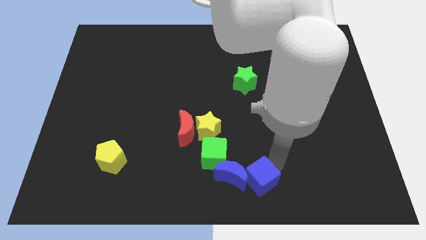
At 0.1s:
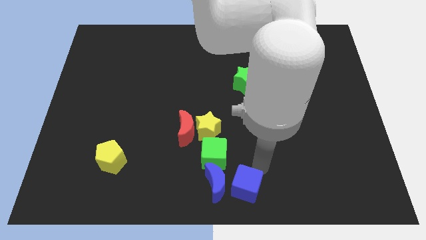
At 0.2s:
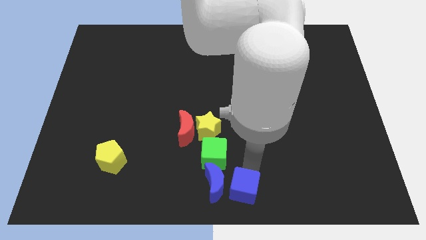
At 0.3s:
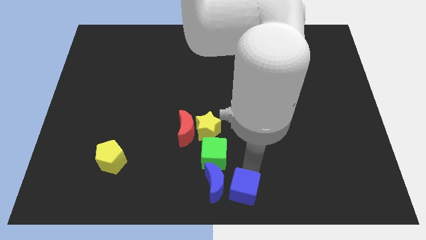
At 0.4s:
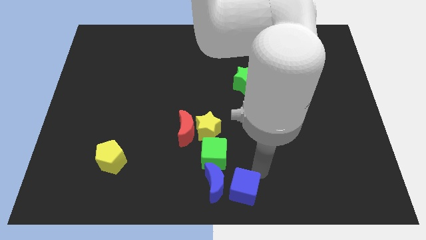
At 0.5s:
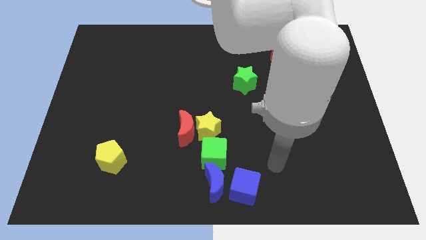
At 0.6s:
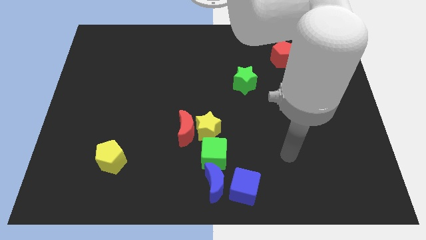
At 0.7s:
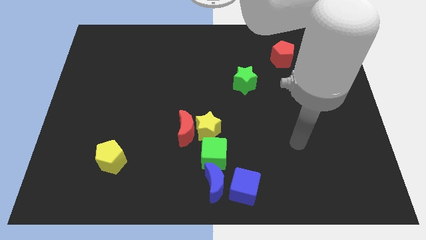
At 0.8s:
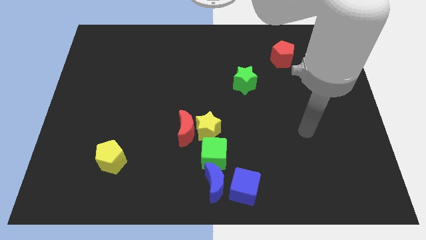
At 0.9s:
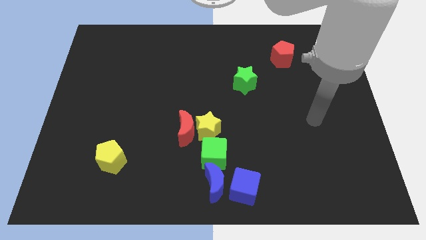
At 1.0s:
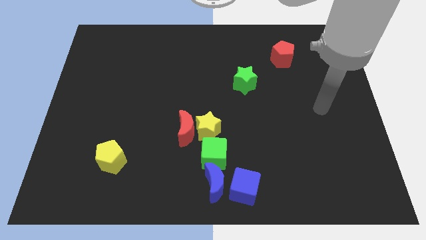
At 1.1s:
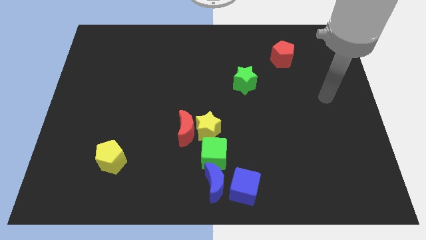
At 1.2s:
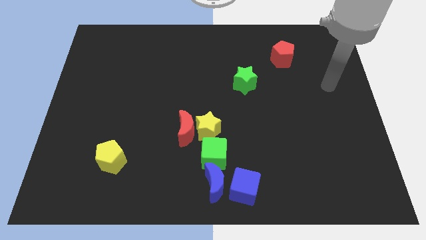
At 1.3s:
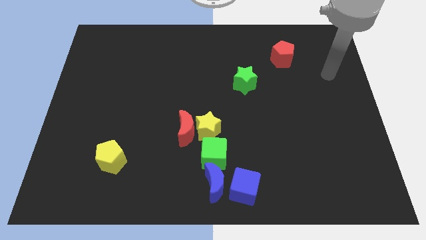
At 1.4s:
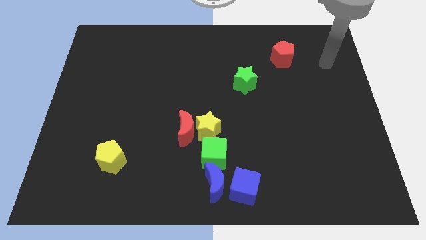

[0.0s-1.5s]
place the blue moon vertically below the green cube

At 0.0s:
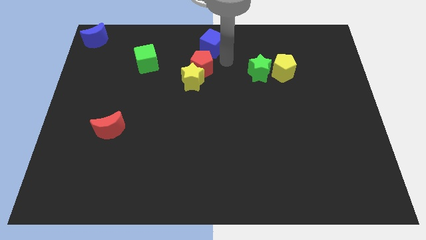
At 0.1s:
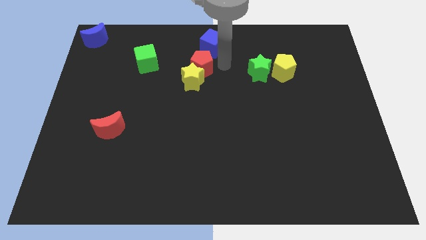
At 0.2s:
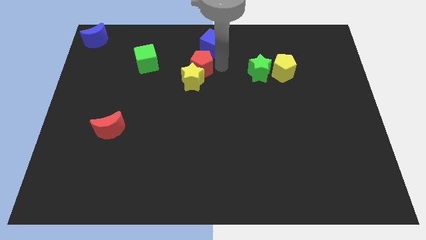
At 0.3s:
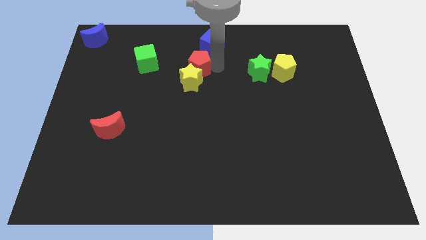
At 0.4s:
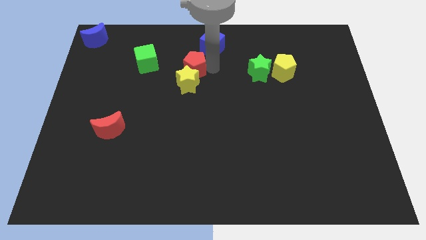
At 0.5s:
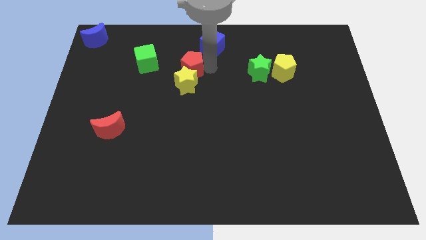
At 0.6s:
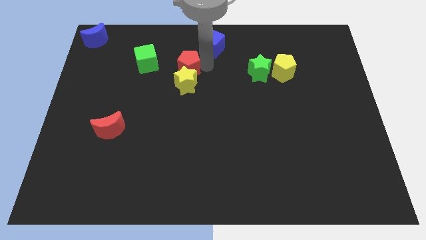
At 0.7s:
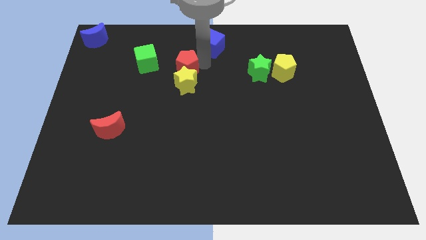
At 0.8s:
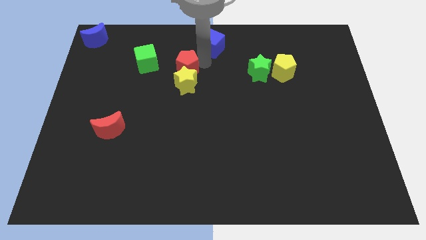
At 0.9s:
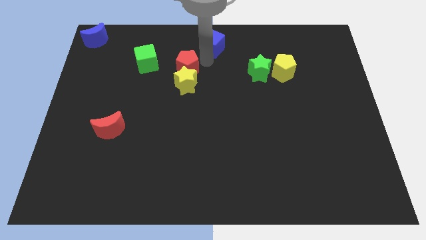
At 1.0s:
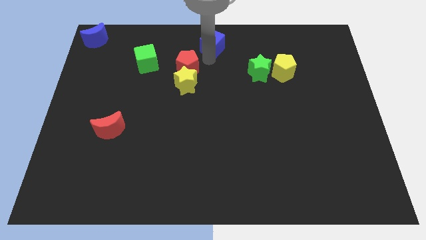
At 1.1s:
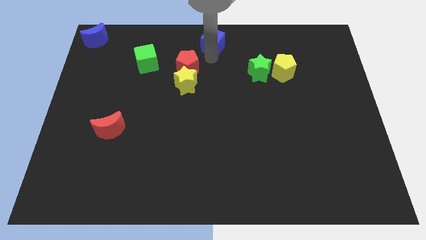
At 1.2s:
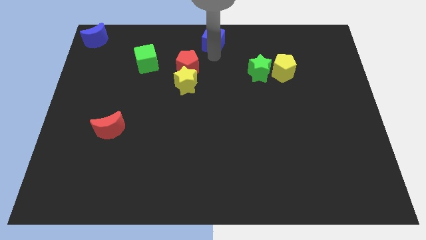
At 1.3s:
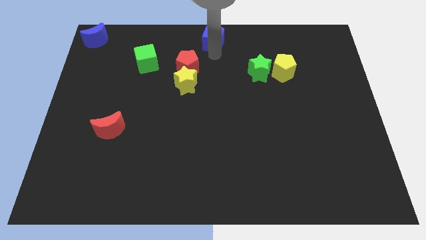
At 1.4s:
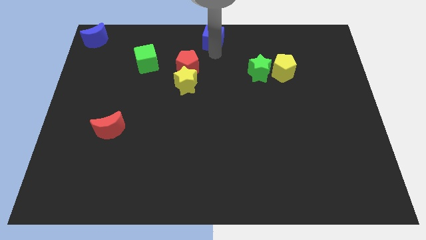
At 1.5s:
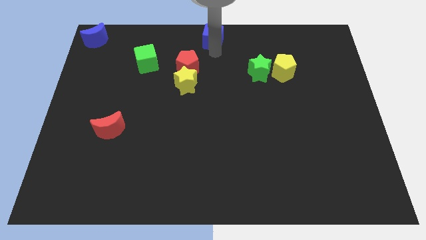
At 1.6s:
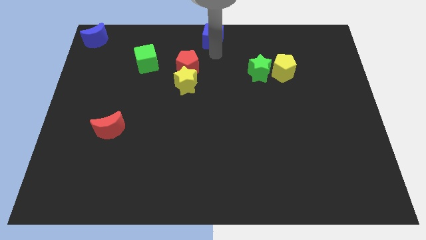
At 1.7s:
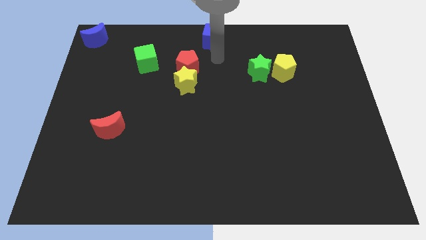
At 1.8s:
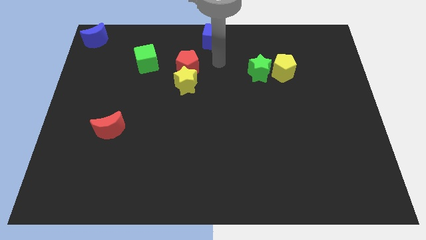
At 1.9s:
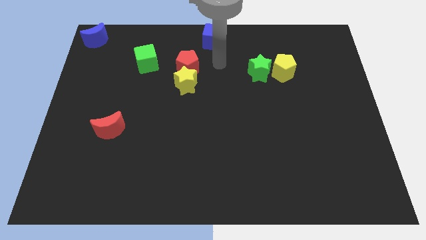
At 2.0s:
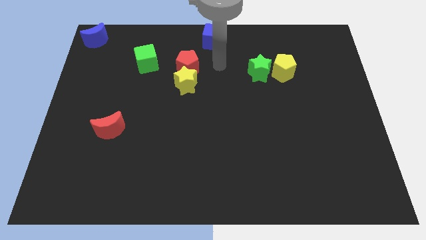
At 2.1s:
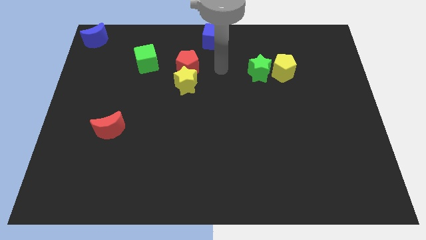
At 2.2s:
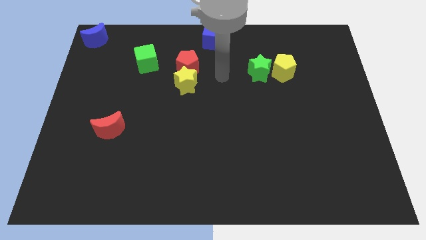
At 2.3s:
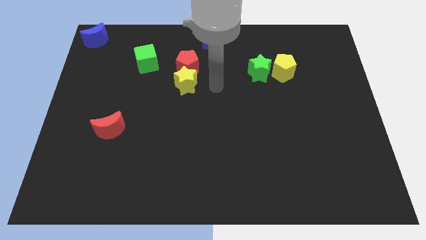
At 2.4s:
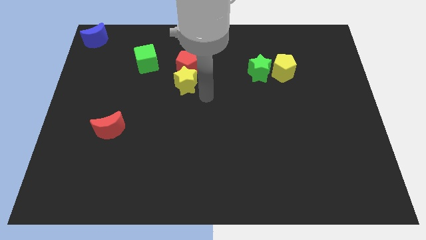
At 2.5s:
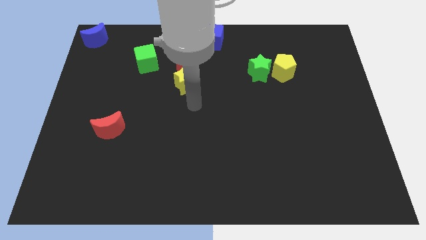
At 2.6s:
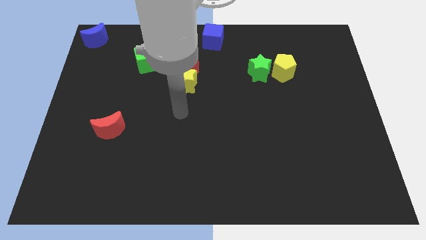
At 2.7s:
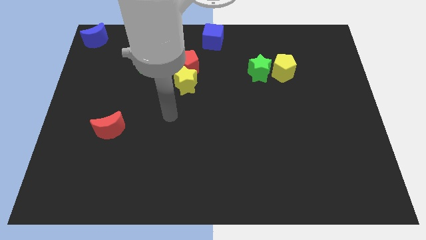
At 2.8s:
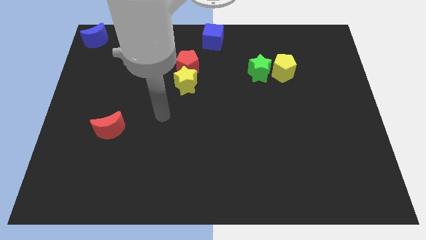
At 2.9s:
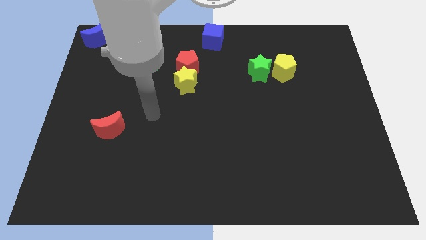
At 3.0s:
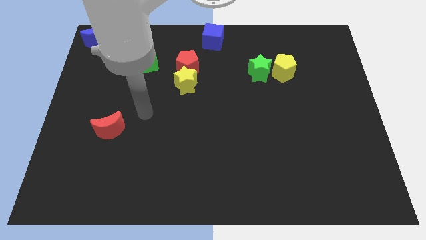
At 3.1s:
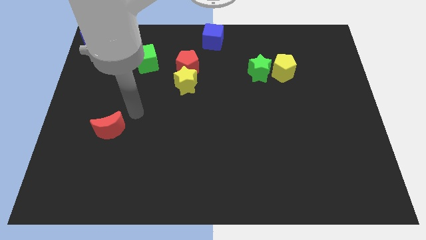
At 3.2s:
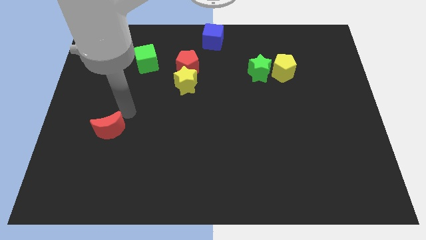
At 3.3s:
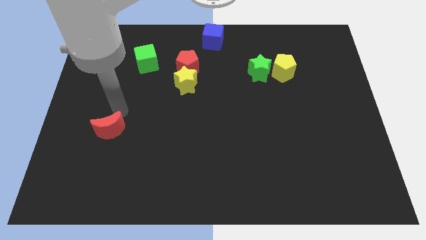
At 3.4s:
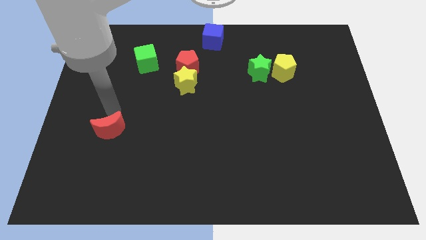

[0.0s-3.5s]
push the group of blocks and blue cube away from each other

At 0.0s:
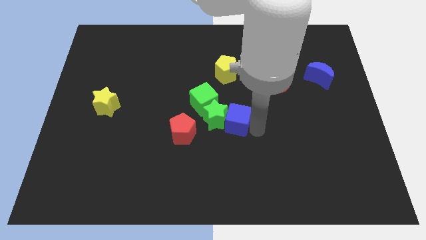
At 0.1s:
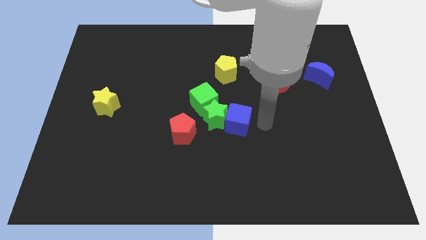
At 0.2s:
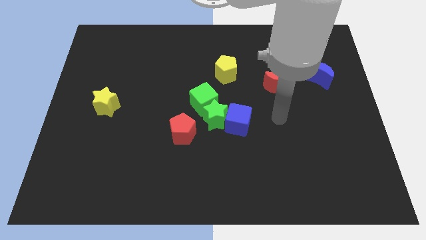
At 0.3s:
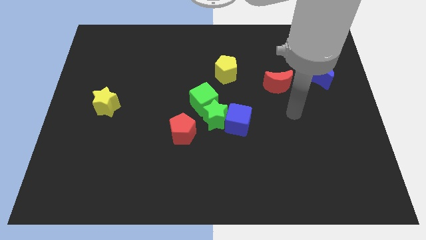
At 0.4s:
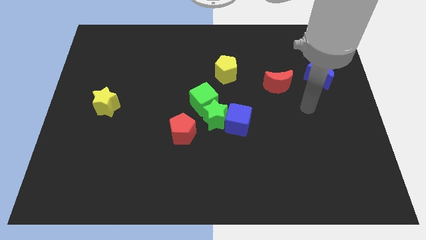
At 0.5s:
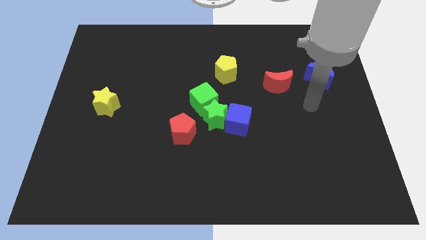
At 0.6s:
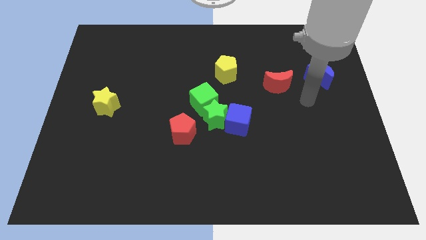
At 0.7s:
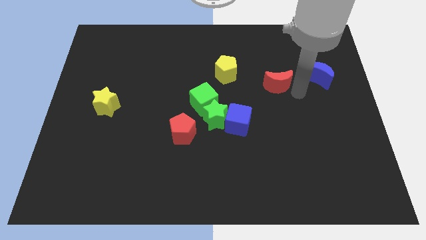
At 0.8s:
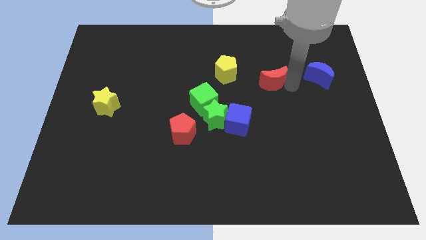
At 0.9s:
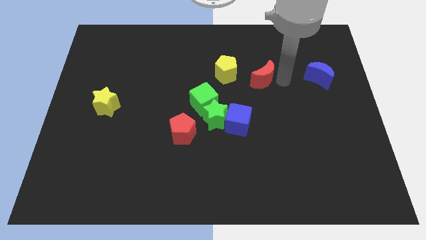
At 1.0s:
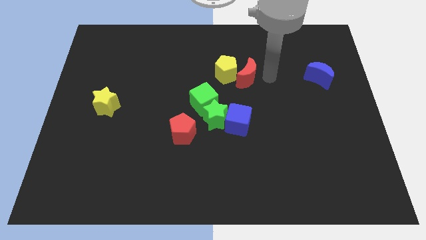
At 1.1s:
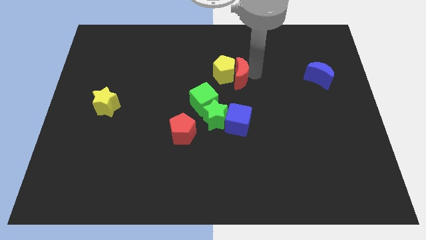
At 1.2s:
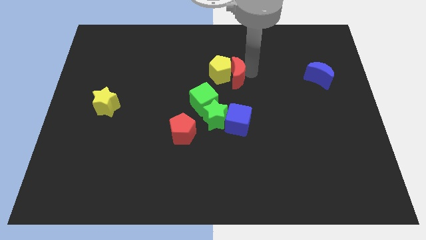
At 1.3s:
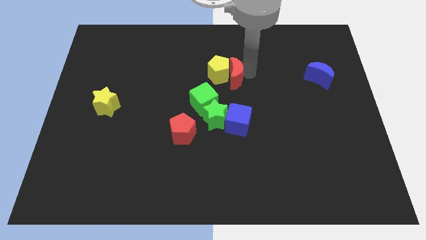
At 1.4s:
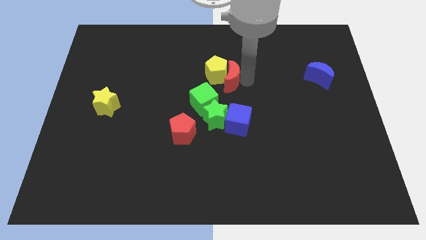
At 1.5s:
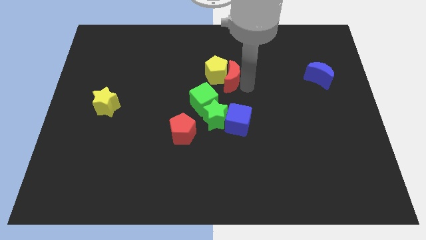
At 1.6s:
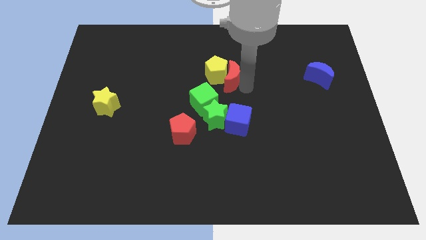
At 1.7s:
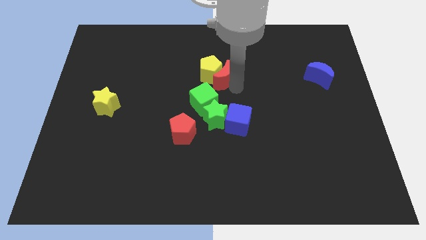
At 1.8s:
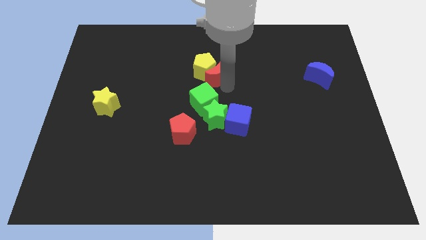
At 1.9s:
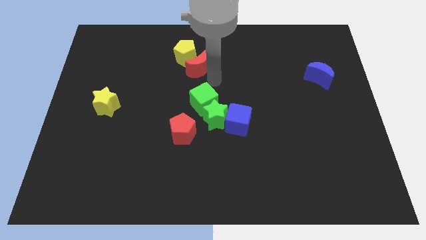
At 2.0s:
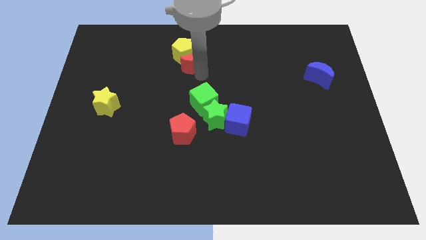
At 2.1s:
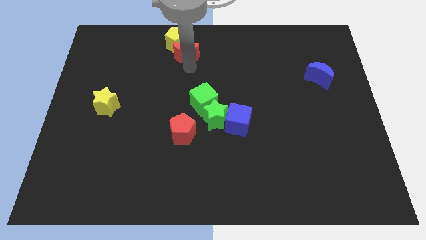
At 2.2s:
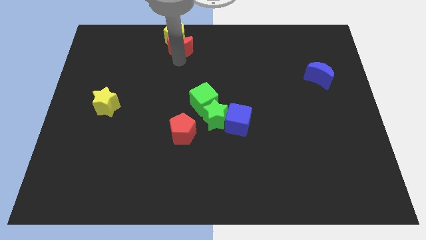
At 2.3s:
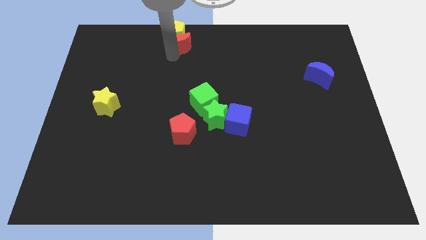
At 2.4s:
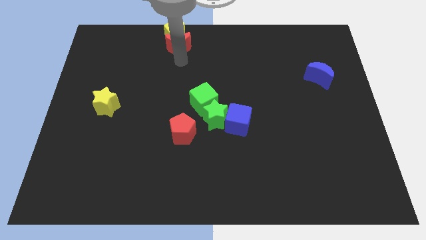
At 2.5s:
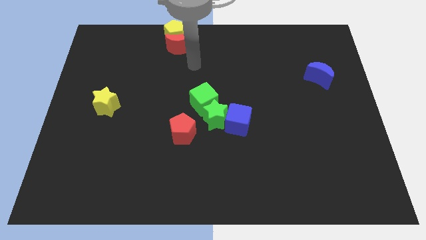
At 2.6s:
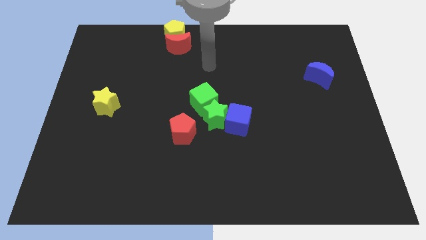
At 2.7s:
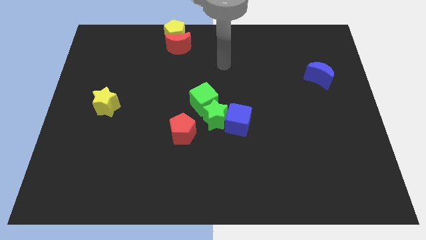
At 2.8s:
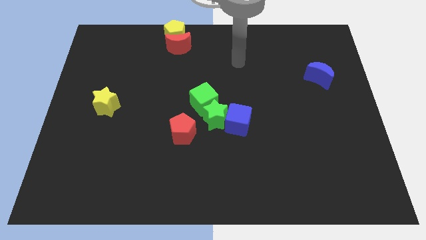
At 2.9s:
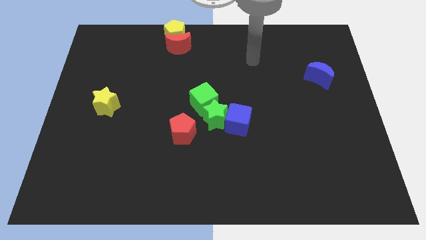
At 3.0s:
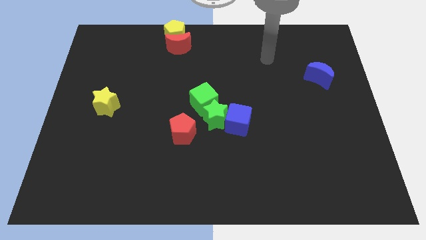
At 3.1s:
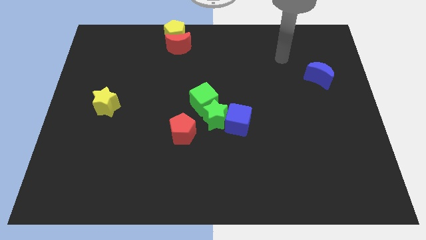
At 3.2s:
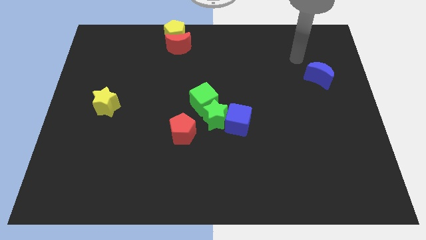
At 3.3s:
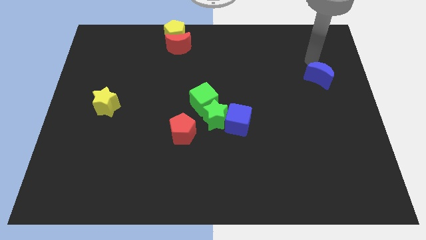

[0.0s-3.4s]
move red crescent and yellow pentagon towards top

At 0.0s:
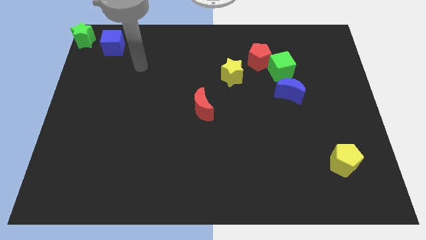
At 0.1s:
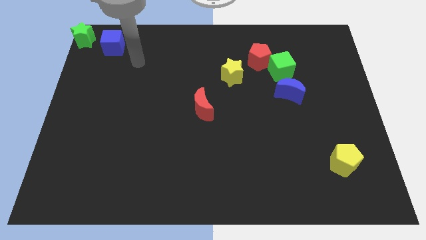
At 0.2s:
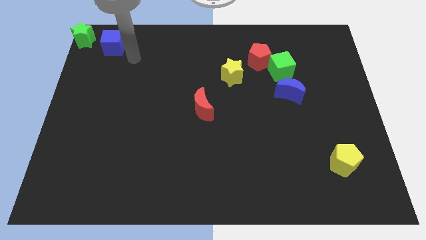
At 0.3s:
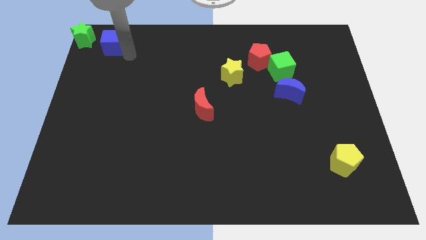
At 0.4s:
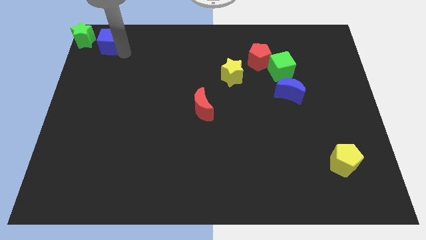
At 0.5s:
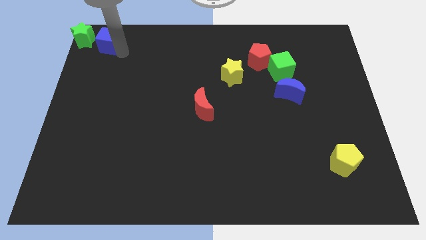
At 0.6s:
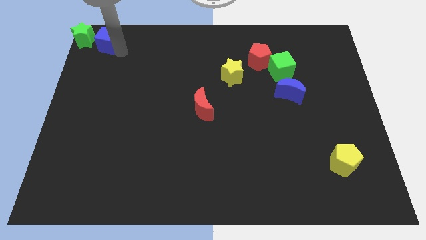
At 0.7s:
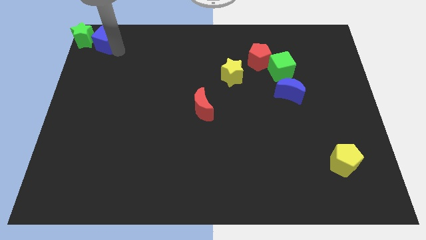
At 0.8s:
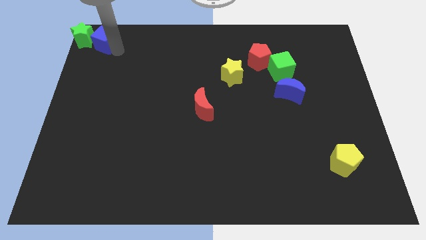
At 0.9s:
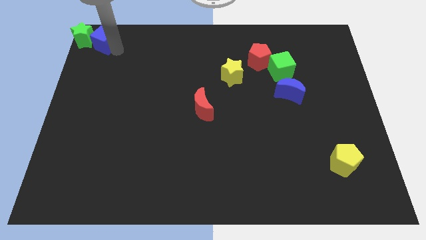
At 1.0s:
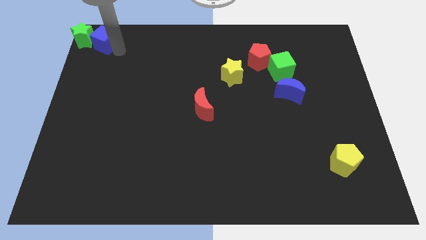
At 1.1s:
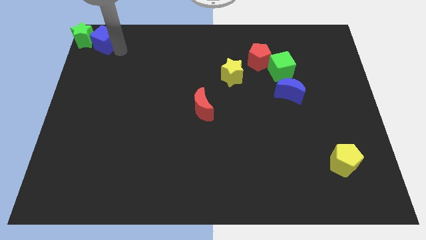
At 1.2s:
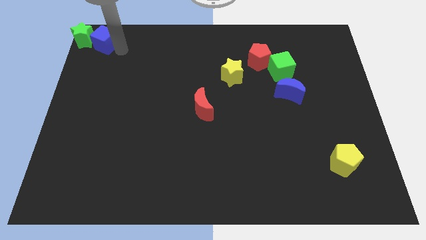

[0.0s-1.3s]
place the blue cube to the right of the green star
